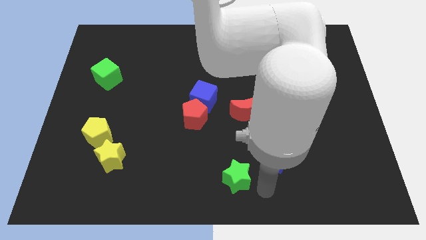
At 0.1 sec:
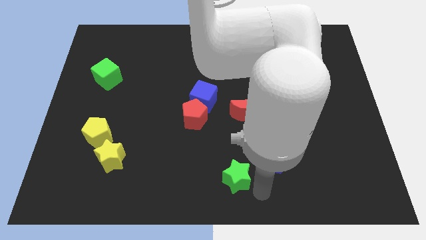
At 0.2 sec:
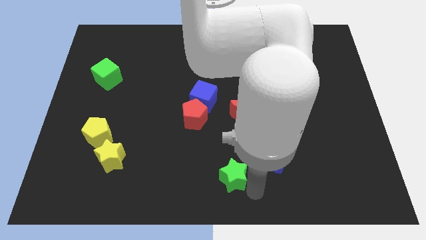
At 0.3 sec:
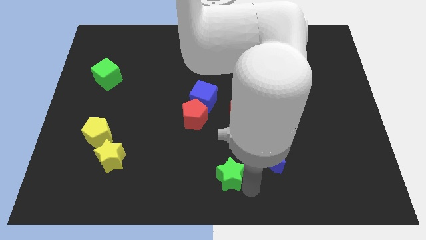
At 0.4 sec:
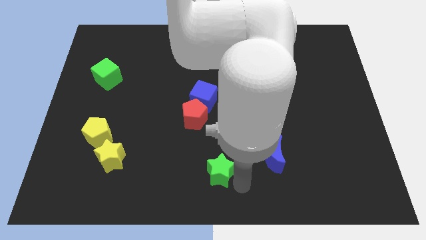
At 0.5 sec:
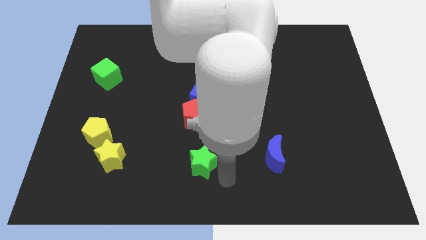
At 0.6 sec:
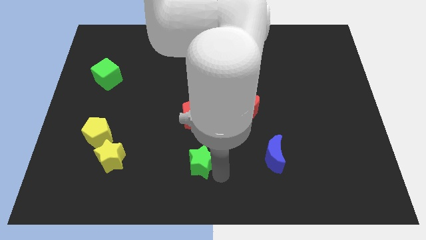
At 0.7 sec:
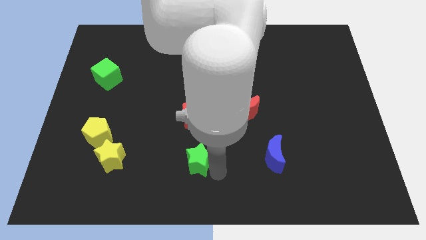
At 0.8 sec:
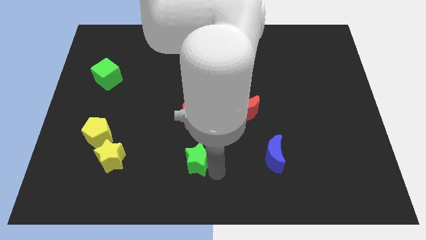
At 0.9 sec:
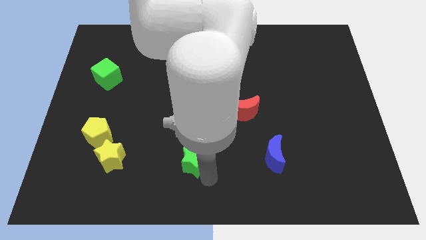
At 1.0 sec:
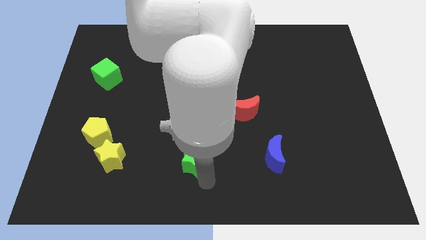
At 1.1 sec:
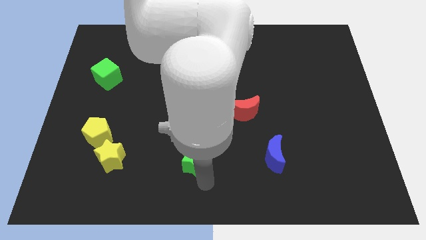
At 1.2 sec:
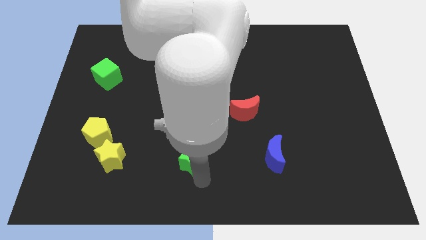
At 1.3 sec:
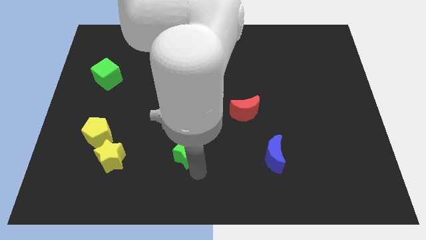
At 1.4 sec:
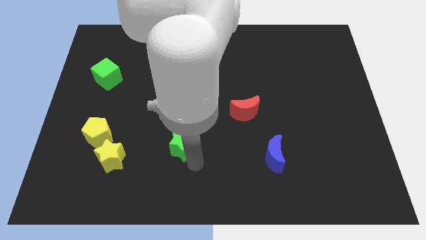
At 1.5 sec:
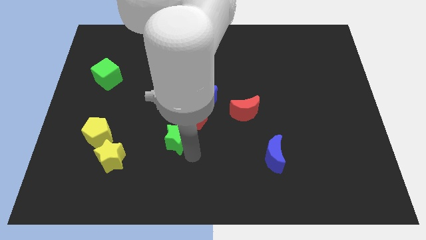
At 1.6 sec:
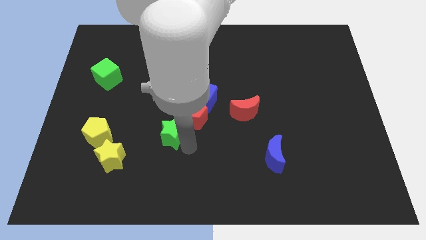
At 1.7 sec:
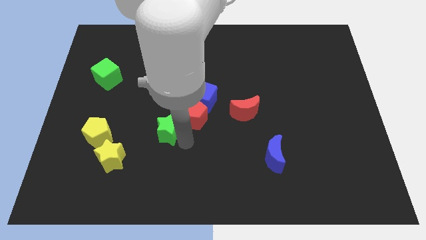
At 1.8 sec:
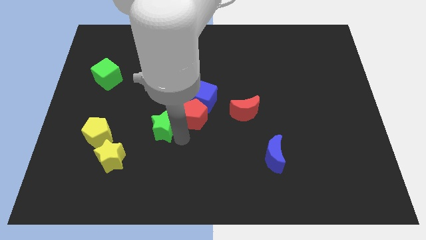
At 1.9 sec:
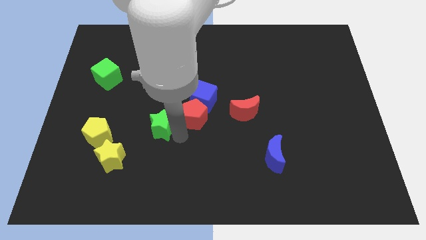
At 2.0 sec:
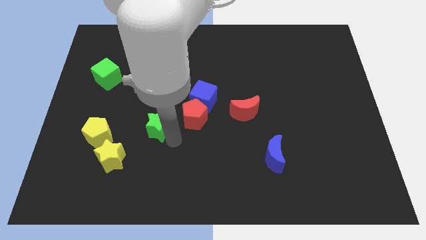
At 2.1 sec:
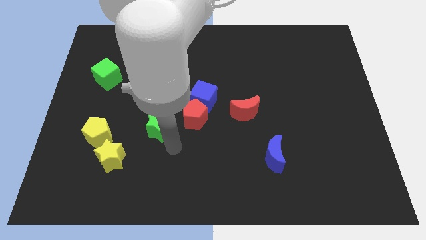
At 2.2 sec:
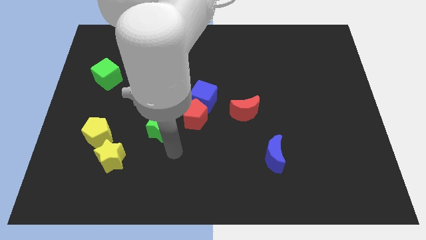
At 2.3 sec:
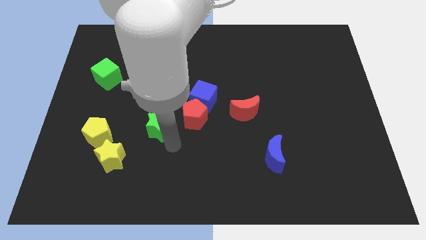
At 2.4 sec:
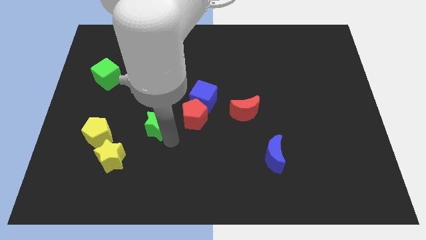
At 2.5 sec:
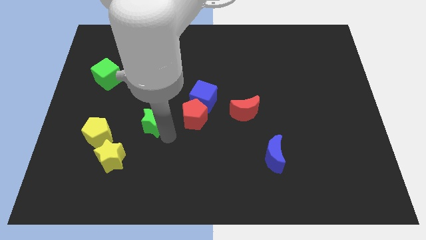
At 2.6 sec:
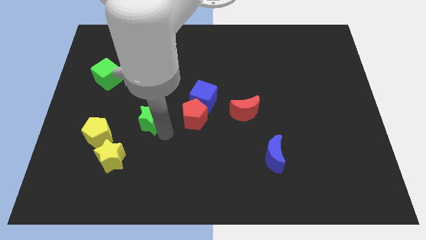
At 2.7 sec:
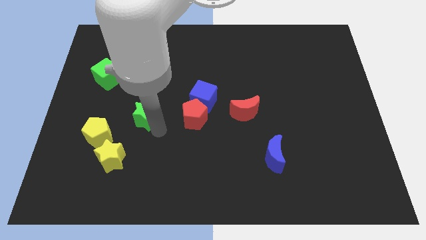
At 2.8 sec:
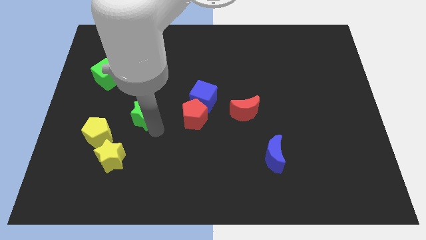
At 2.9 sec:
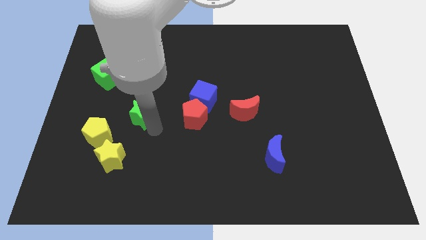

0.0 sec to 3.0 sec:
place the green star to the left of the red pentagon

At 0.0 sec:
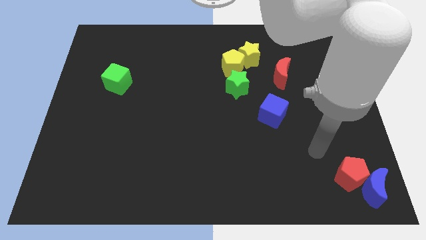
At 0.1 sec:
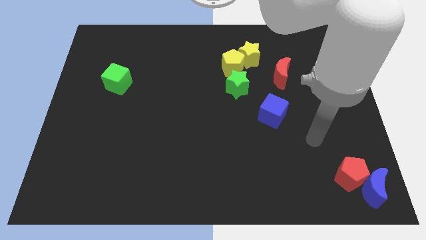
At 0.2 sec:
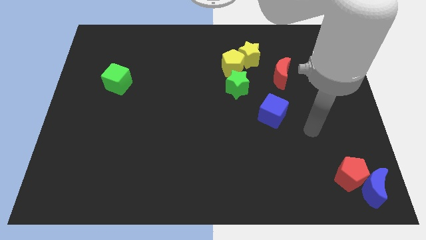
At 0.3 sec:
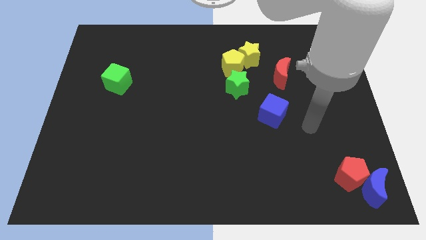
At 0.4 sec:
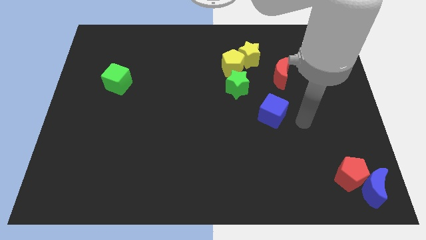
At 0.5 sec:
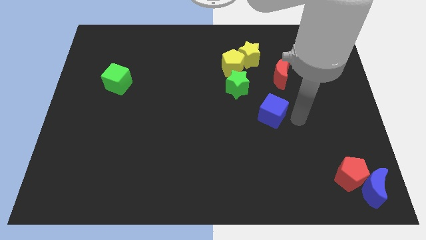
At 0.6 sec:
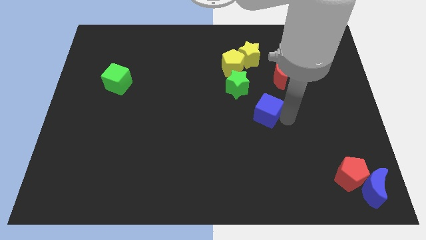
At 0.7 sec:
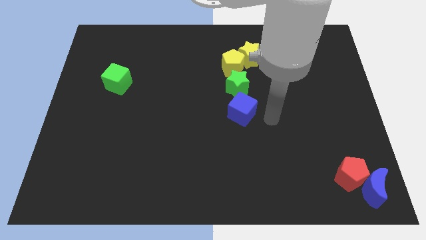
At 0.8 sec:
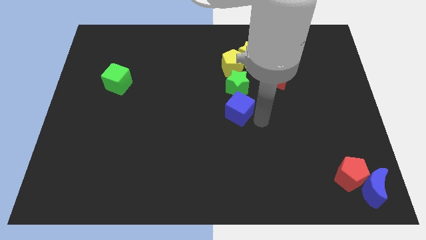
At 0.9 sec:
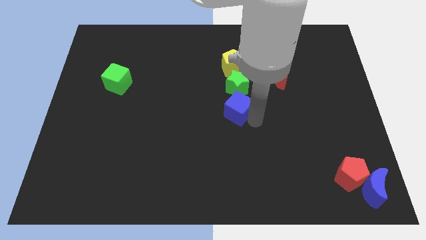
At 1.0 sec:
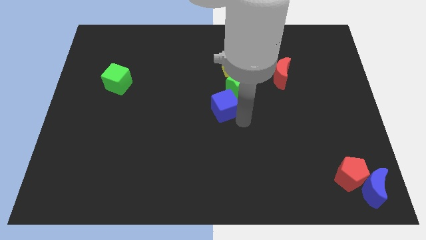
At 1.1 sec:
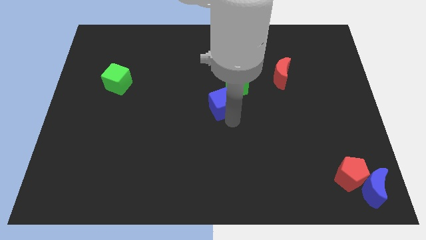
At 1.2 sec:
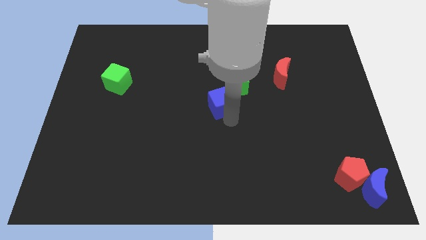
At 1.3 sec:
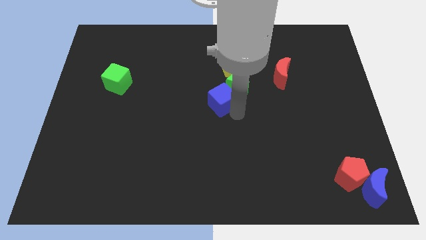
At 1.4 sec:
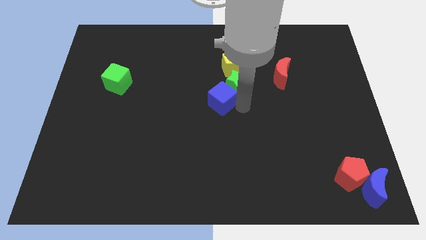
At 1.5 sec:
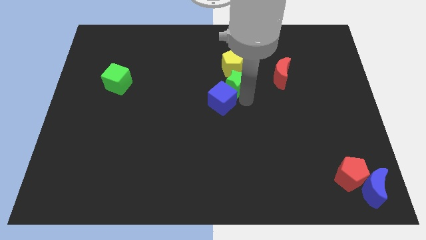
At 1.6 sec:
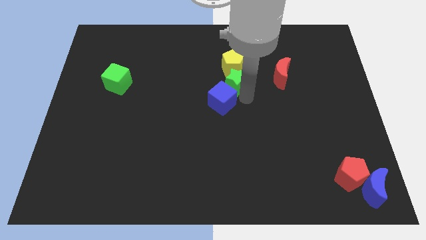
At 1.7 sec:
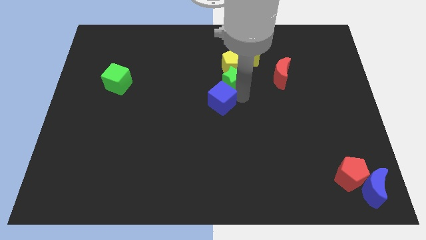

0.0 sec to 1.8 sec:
move the blue cube towards the green star

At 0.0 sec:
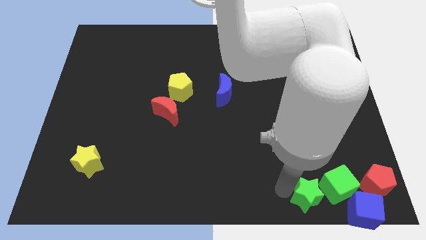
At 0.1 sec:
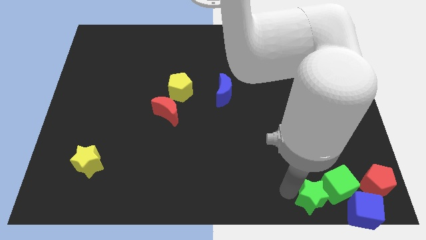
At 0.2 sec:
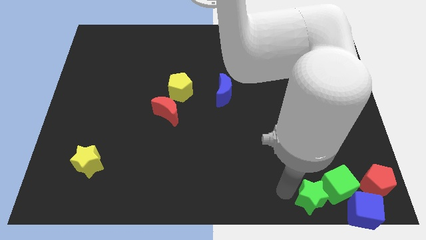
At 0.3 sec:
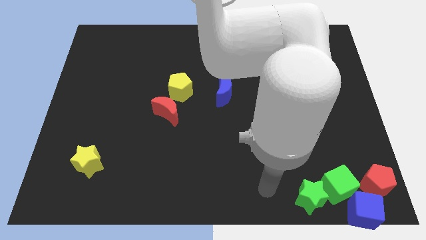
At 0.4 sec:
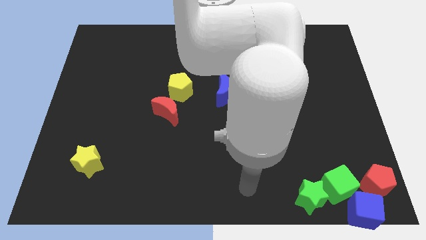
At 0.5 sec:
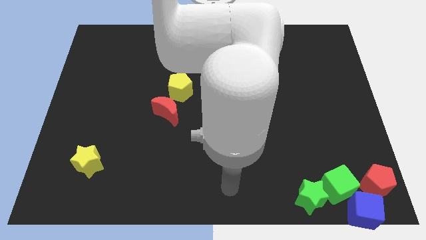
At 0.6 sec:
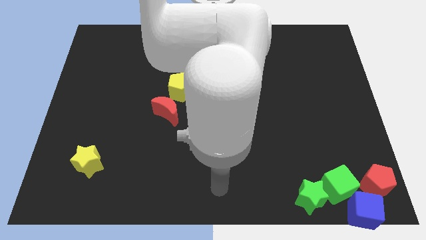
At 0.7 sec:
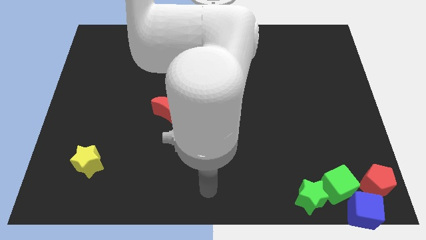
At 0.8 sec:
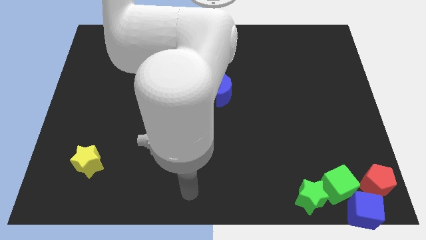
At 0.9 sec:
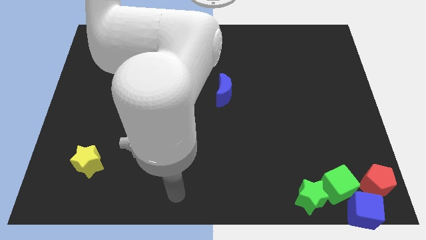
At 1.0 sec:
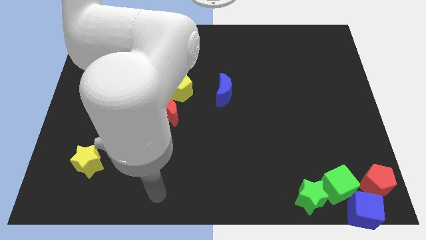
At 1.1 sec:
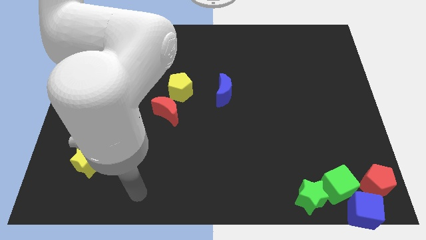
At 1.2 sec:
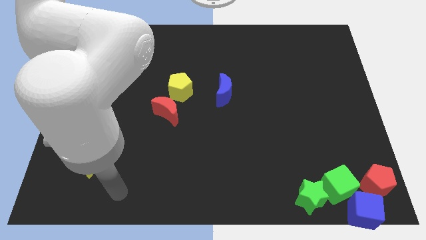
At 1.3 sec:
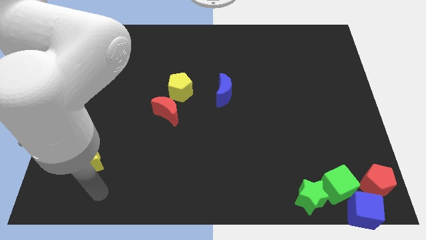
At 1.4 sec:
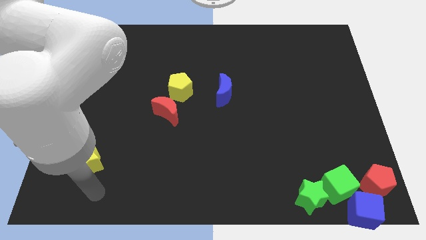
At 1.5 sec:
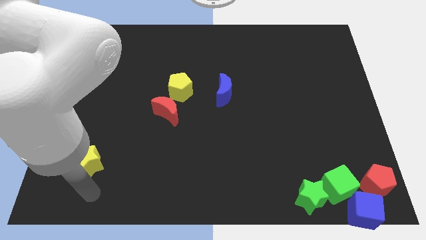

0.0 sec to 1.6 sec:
move your arm away from the green star

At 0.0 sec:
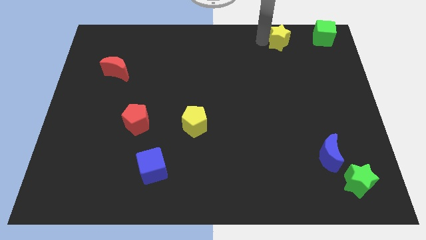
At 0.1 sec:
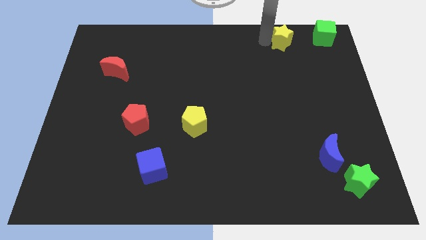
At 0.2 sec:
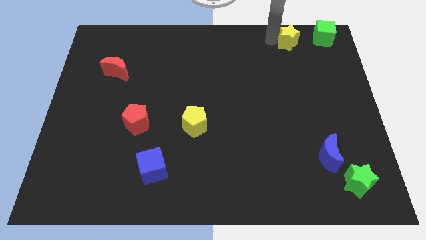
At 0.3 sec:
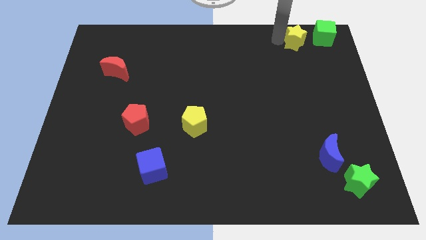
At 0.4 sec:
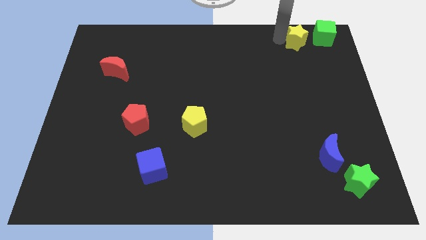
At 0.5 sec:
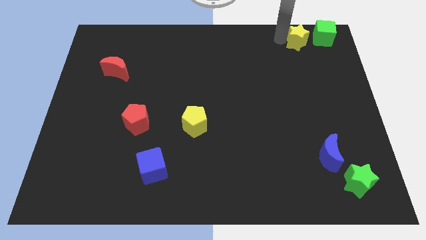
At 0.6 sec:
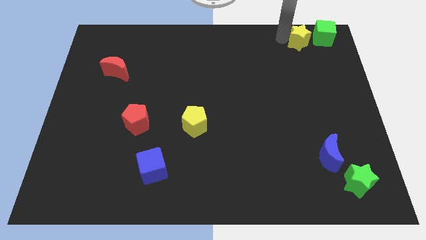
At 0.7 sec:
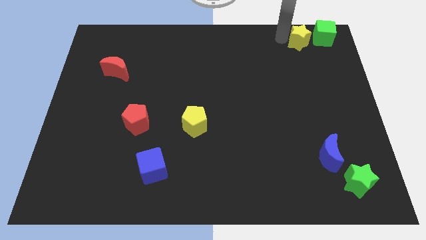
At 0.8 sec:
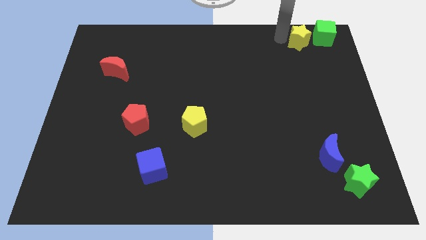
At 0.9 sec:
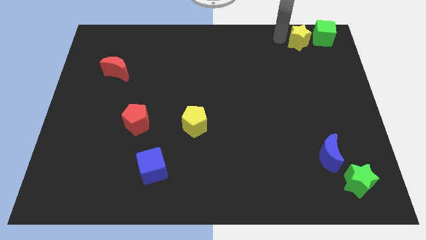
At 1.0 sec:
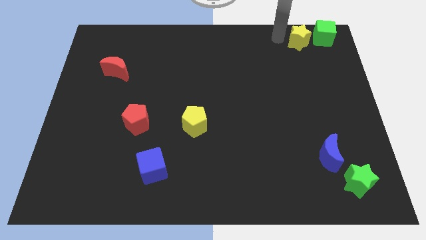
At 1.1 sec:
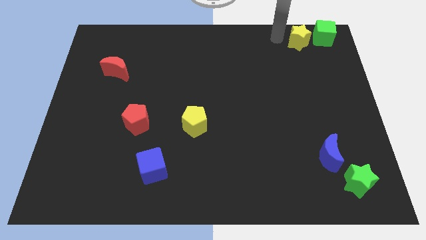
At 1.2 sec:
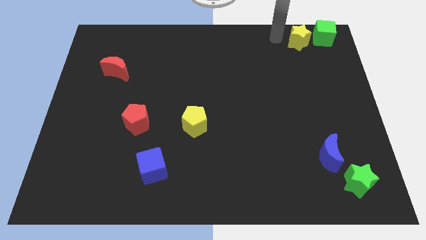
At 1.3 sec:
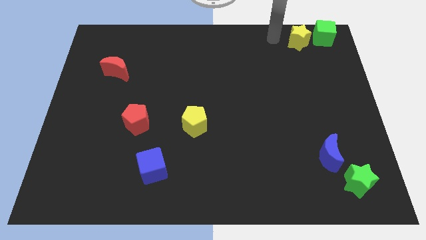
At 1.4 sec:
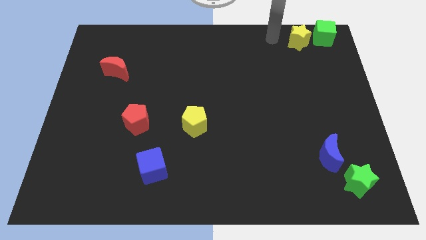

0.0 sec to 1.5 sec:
move the yellow star to the left of the green cube

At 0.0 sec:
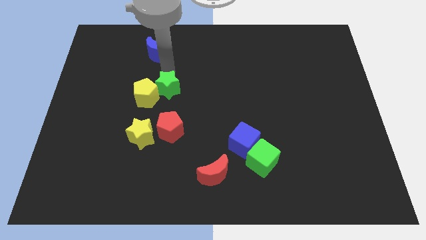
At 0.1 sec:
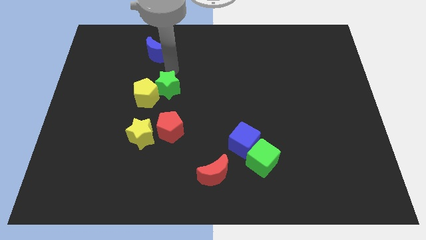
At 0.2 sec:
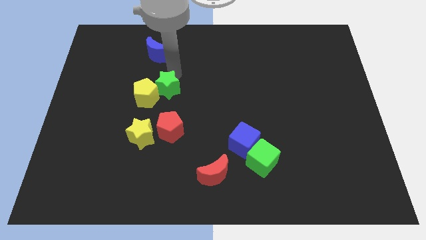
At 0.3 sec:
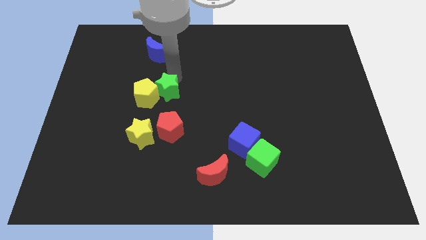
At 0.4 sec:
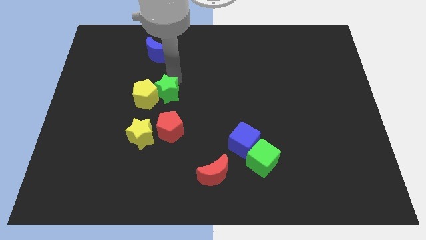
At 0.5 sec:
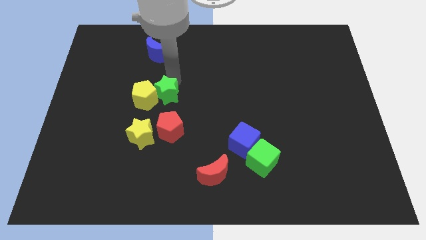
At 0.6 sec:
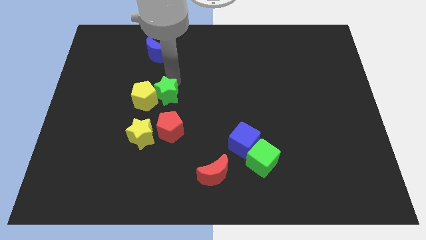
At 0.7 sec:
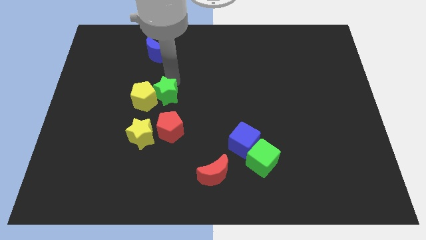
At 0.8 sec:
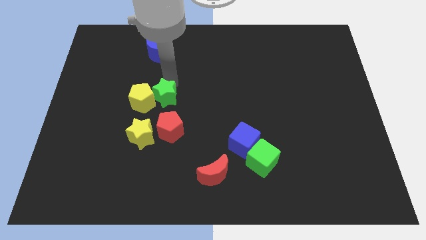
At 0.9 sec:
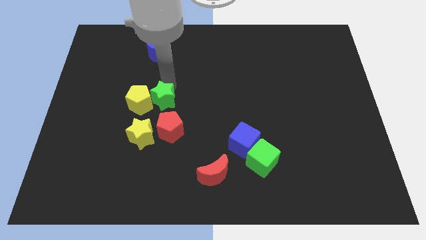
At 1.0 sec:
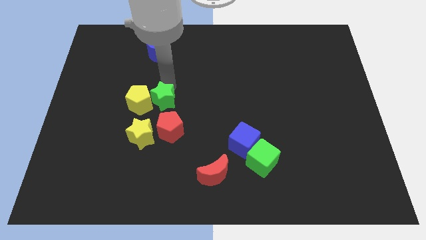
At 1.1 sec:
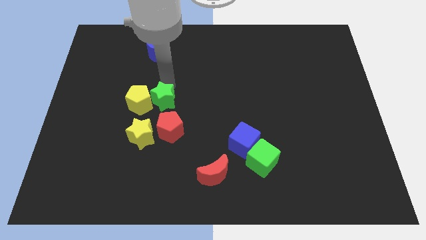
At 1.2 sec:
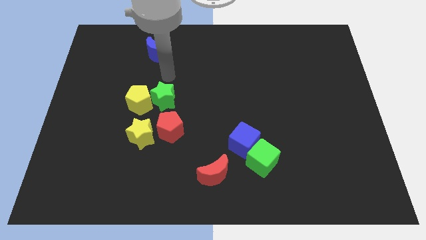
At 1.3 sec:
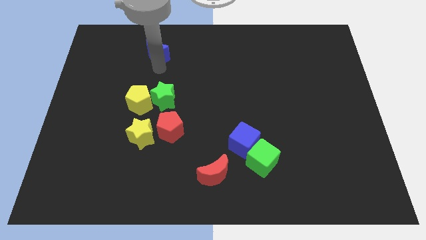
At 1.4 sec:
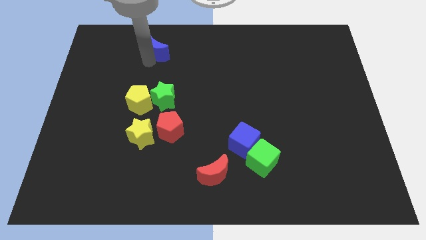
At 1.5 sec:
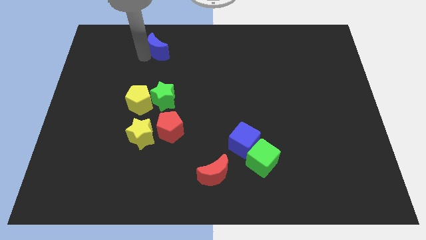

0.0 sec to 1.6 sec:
slide the green star slightly towards down
